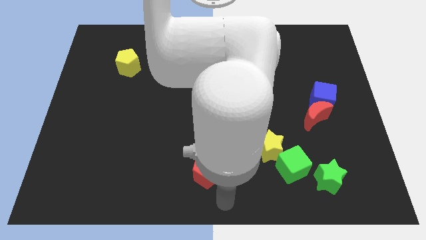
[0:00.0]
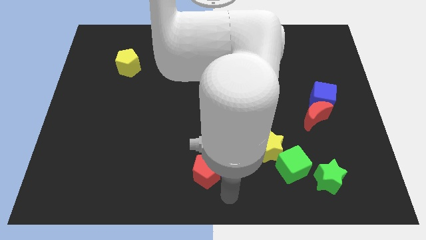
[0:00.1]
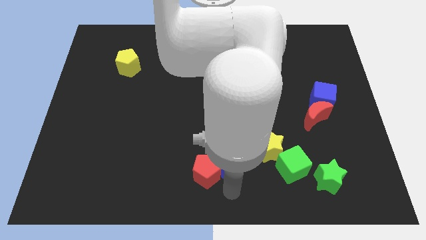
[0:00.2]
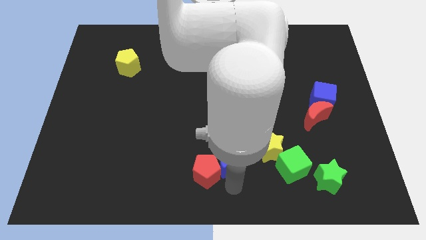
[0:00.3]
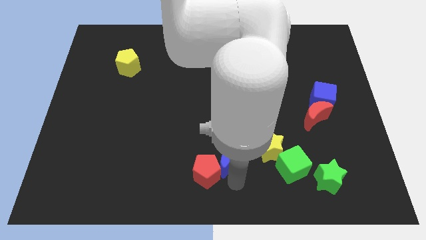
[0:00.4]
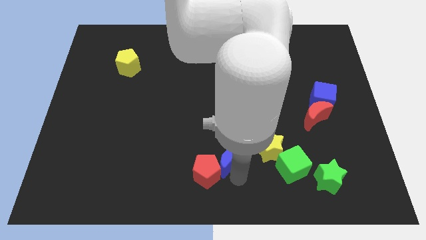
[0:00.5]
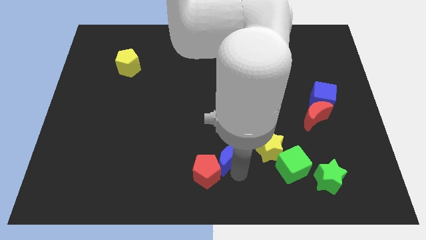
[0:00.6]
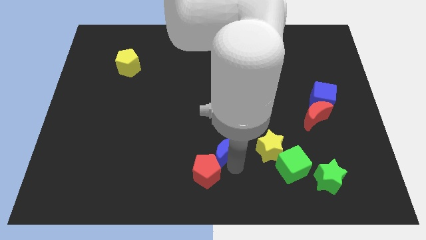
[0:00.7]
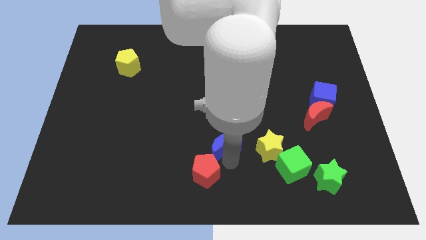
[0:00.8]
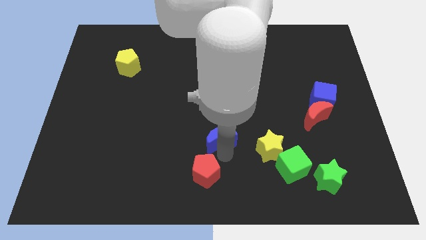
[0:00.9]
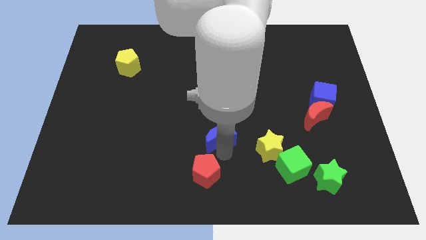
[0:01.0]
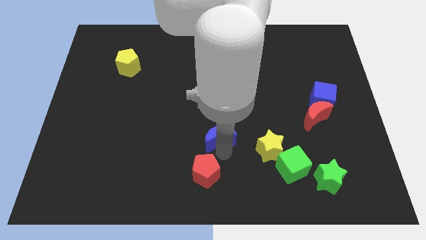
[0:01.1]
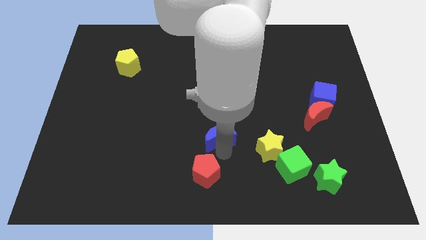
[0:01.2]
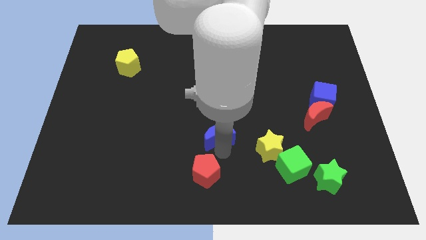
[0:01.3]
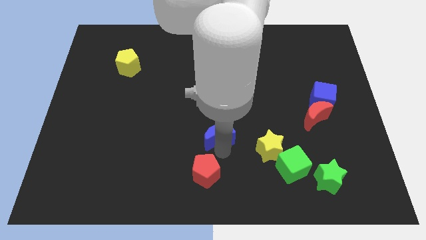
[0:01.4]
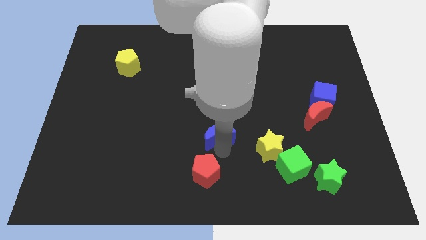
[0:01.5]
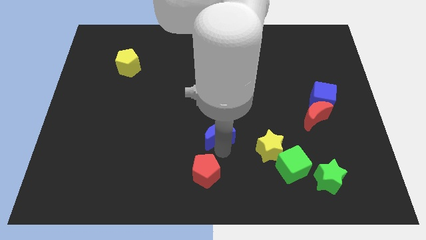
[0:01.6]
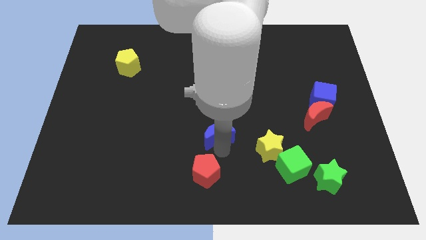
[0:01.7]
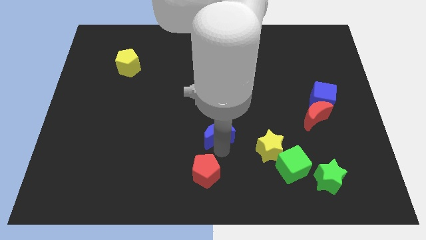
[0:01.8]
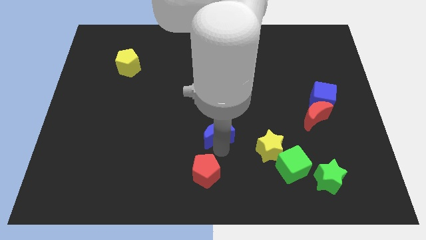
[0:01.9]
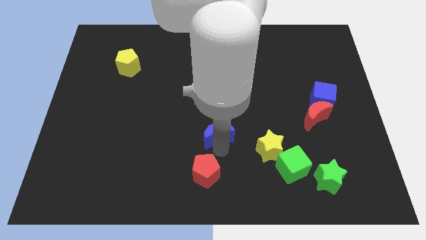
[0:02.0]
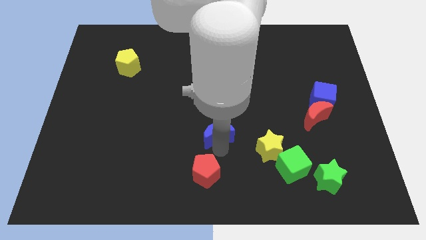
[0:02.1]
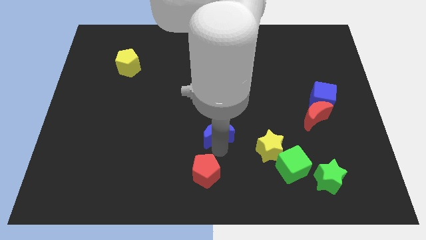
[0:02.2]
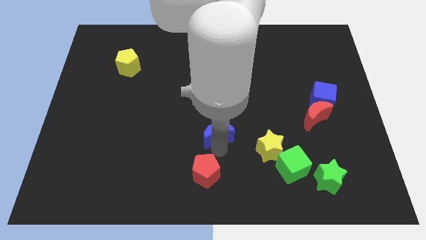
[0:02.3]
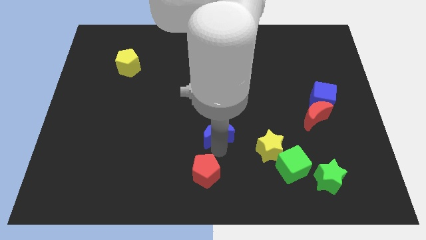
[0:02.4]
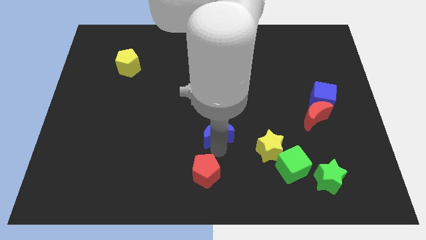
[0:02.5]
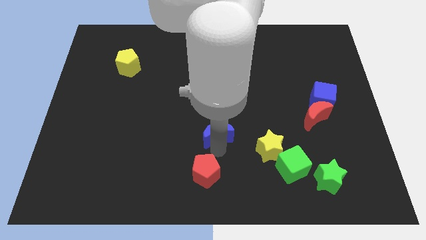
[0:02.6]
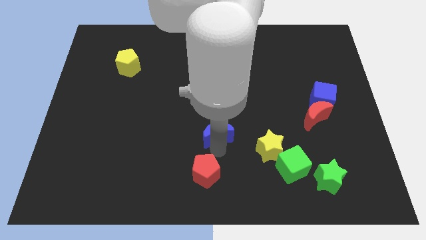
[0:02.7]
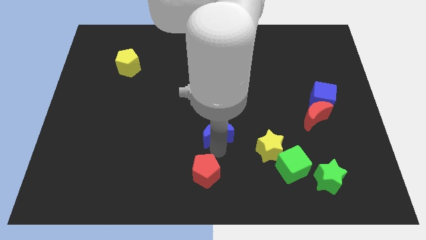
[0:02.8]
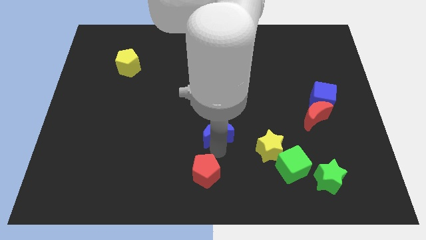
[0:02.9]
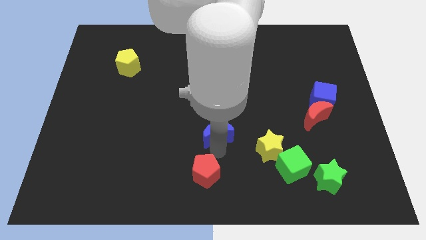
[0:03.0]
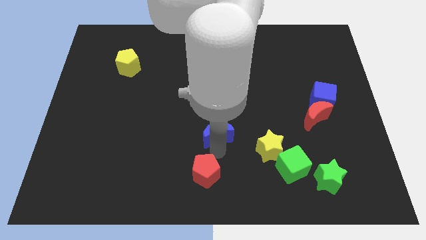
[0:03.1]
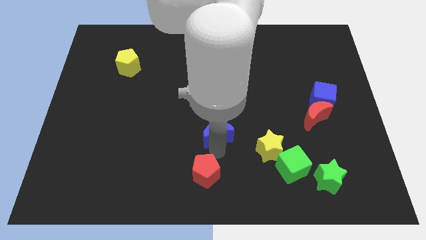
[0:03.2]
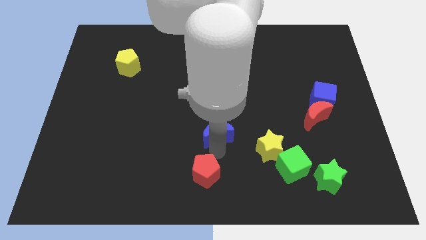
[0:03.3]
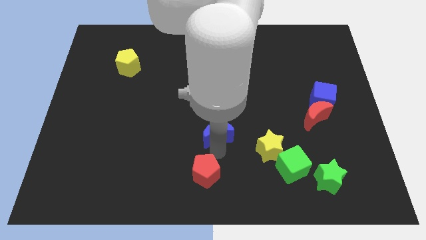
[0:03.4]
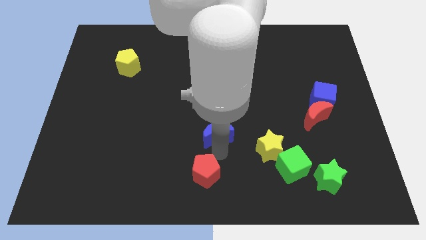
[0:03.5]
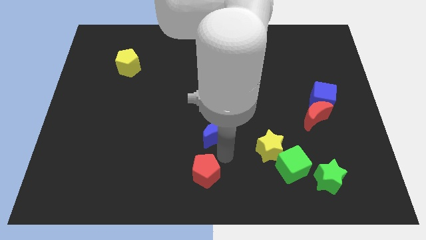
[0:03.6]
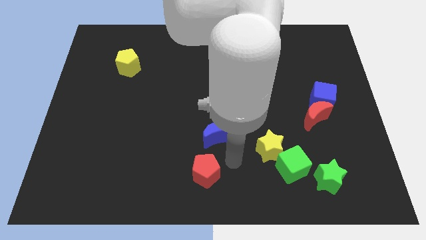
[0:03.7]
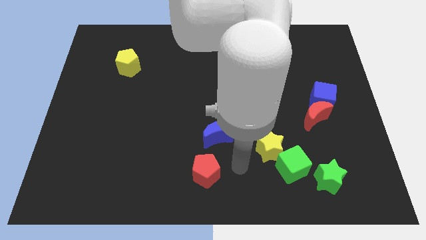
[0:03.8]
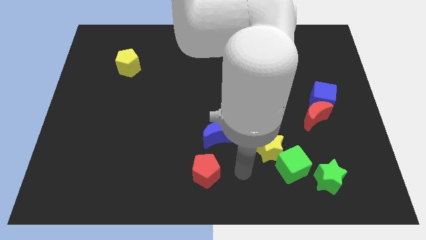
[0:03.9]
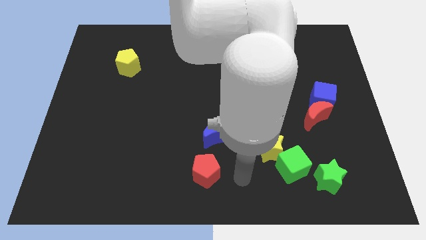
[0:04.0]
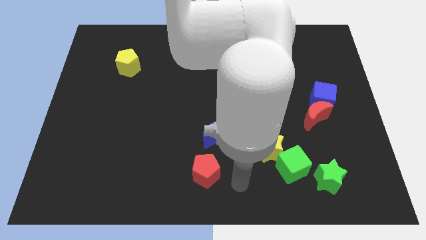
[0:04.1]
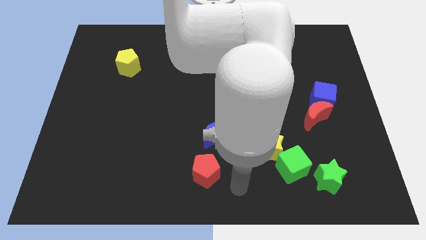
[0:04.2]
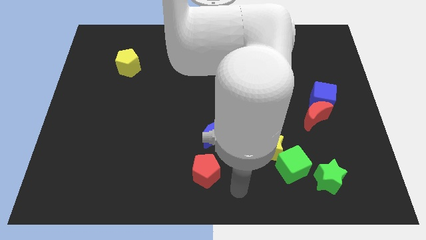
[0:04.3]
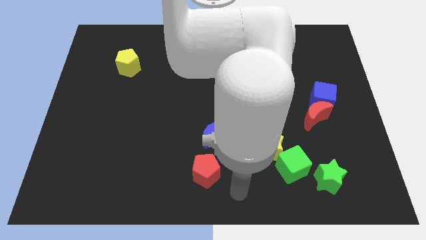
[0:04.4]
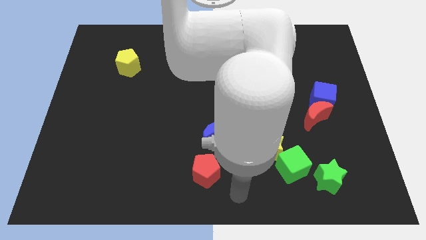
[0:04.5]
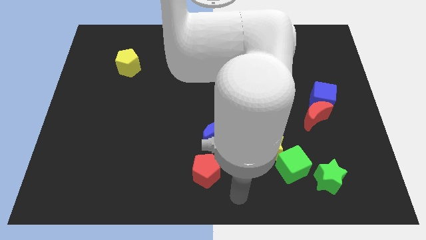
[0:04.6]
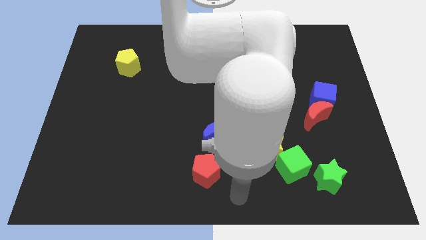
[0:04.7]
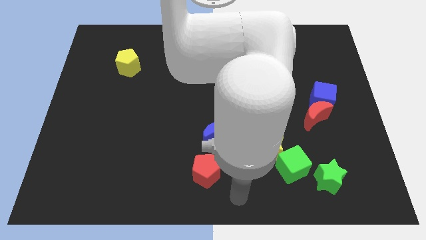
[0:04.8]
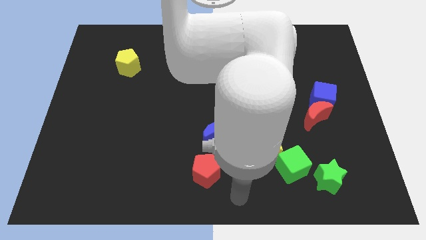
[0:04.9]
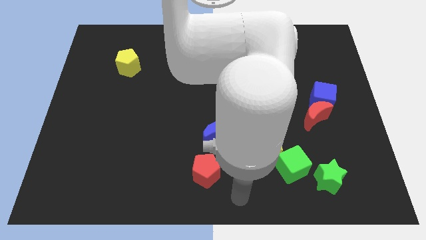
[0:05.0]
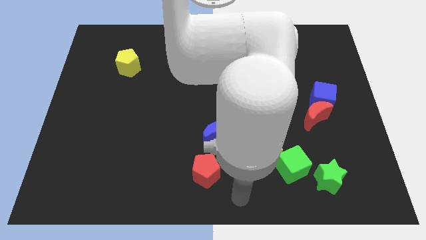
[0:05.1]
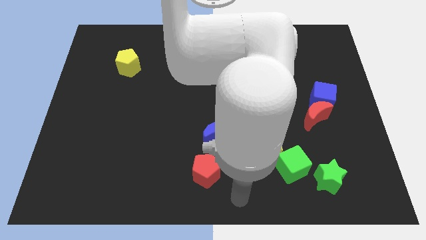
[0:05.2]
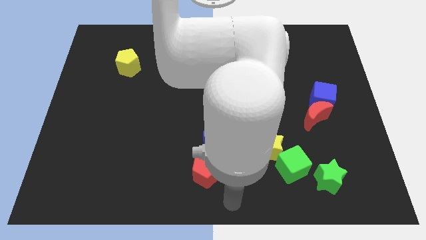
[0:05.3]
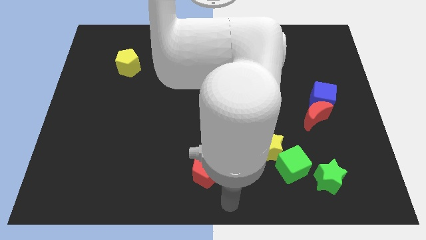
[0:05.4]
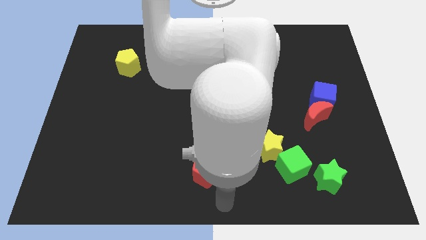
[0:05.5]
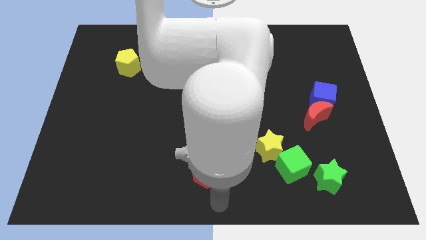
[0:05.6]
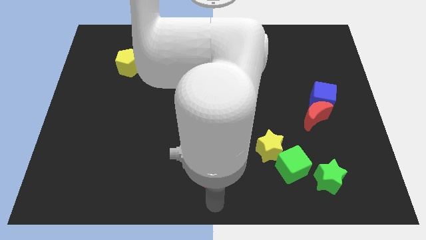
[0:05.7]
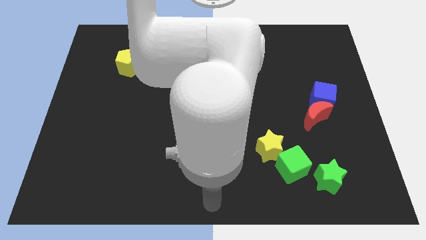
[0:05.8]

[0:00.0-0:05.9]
push the blue moon towards top of red pentagon

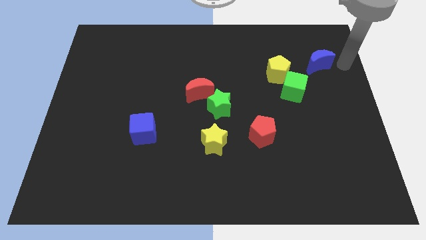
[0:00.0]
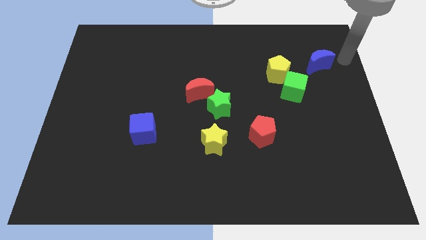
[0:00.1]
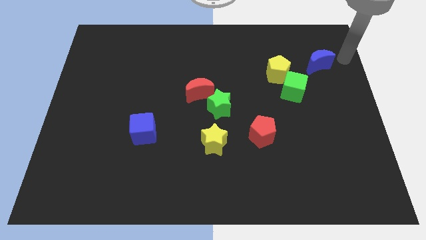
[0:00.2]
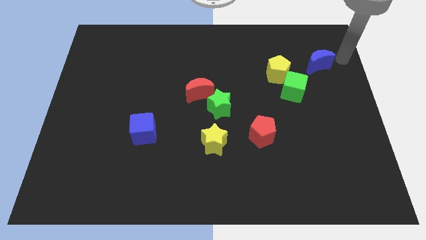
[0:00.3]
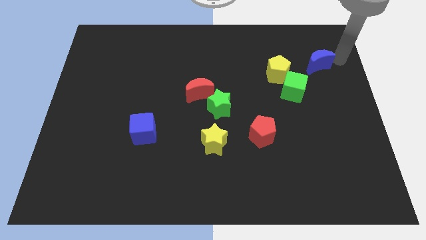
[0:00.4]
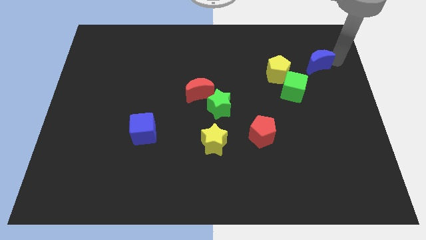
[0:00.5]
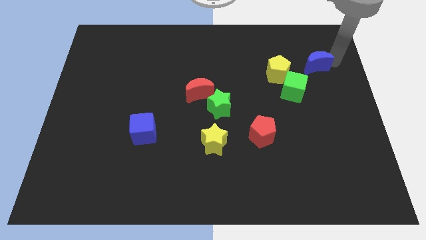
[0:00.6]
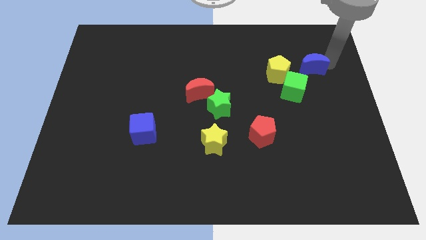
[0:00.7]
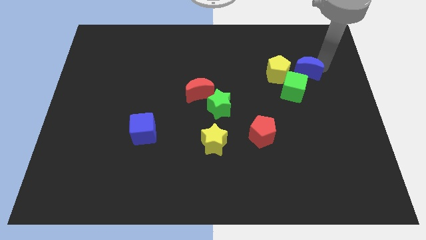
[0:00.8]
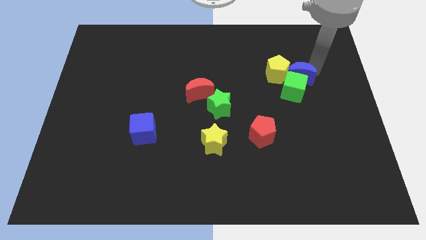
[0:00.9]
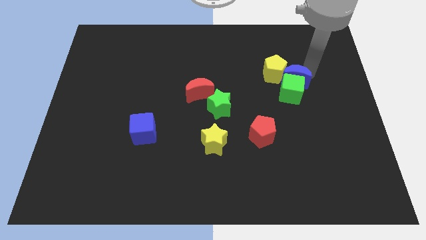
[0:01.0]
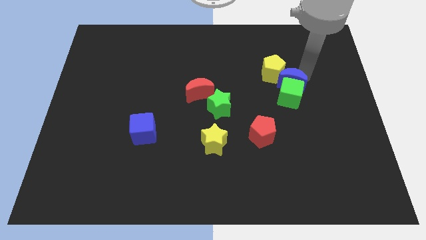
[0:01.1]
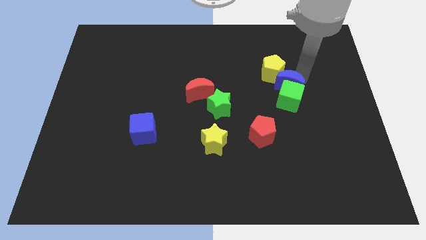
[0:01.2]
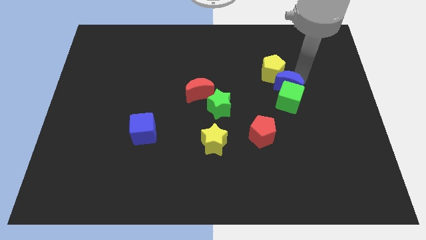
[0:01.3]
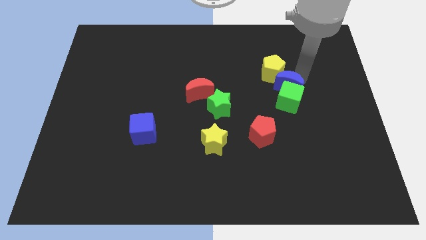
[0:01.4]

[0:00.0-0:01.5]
move the blue moon into the green cube

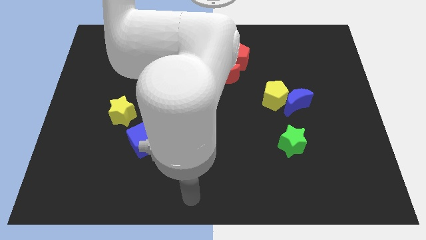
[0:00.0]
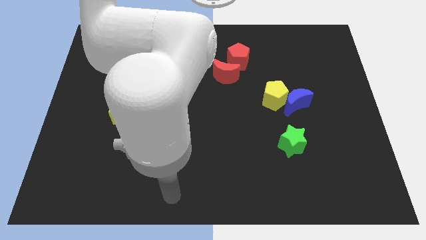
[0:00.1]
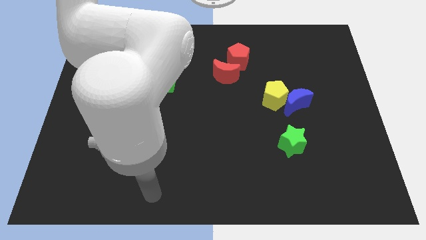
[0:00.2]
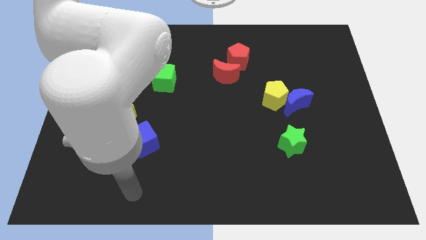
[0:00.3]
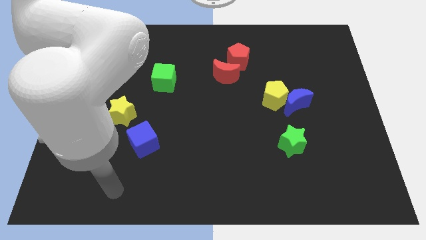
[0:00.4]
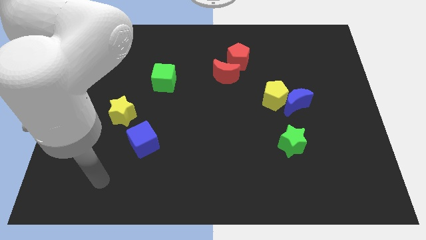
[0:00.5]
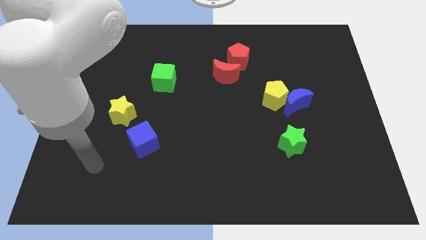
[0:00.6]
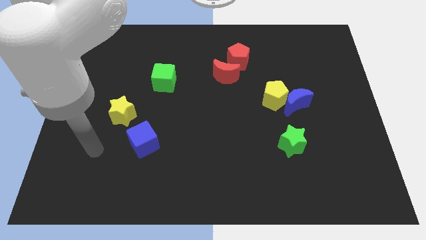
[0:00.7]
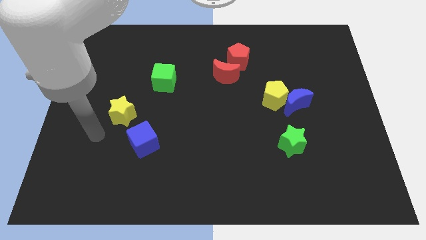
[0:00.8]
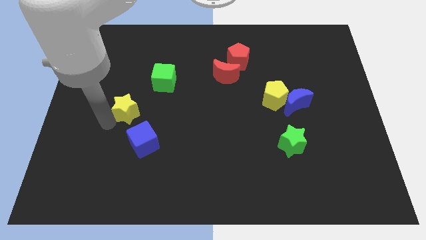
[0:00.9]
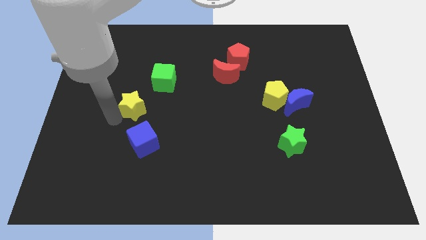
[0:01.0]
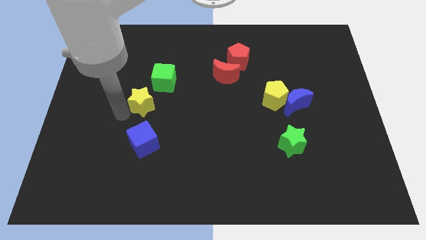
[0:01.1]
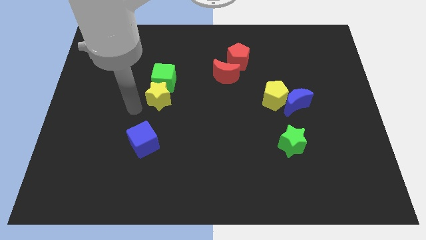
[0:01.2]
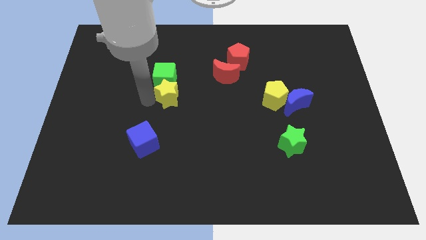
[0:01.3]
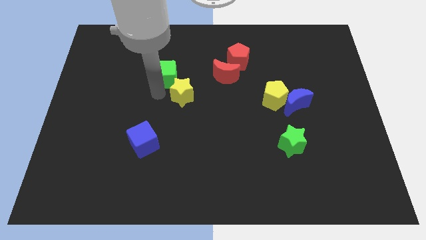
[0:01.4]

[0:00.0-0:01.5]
push the yellow star to the bottom of the green cube
